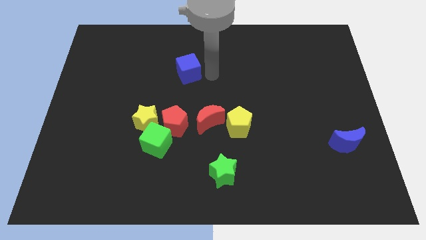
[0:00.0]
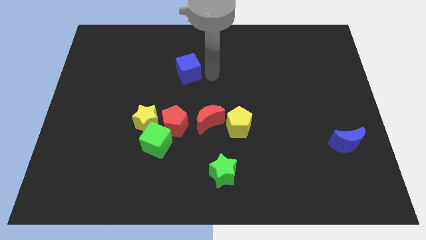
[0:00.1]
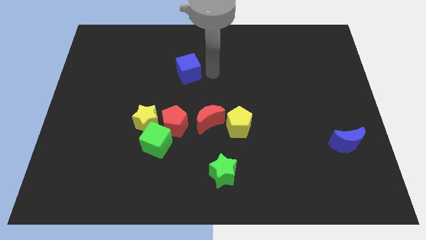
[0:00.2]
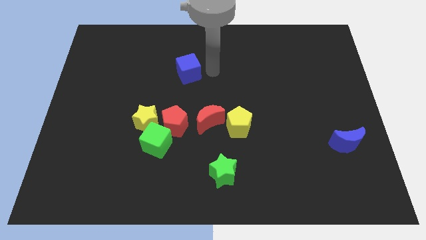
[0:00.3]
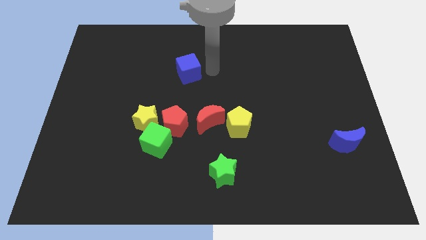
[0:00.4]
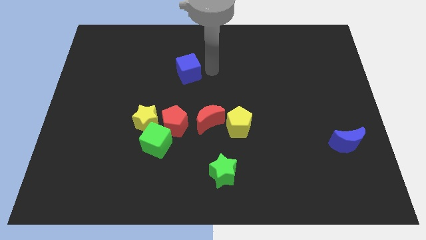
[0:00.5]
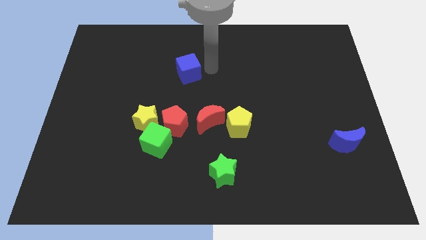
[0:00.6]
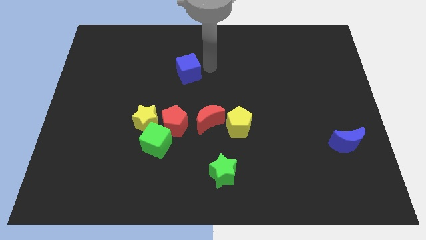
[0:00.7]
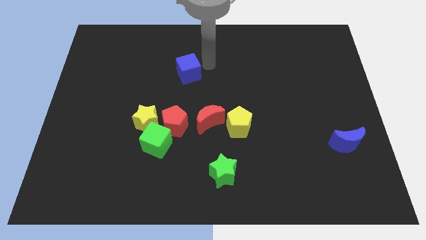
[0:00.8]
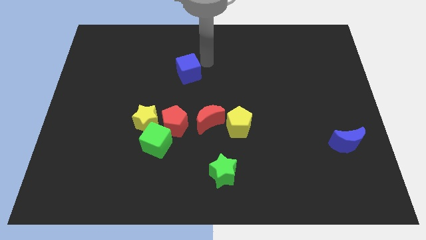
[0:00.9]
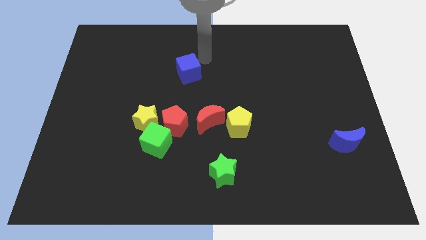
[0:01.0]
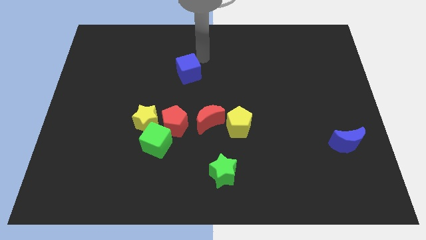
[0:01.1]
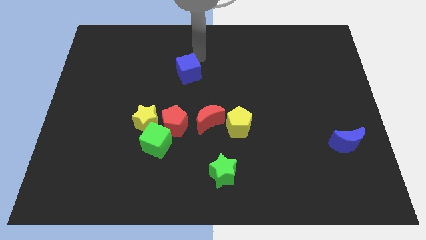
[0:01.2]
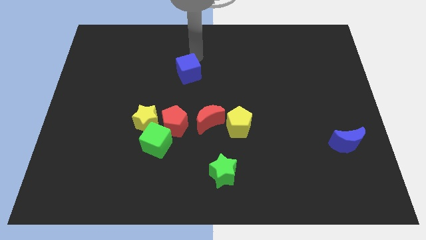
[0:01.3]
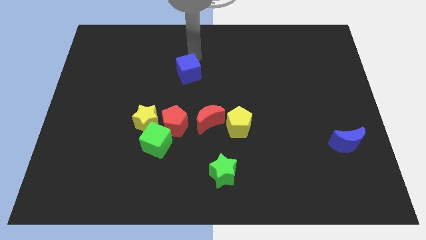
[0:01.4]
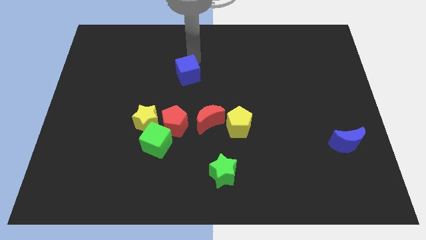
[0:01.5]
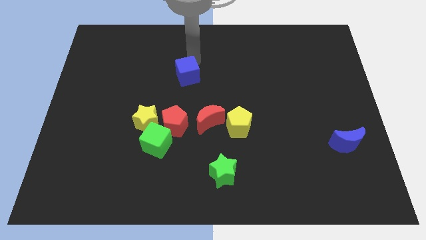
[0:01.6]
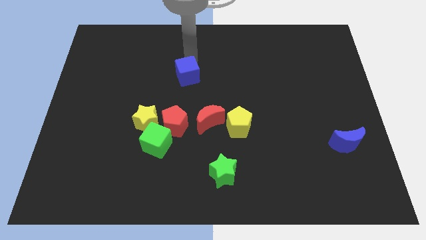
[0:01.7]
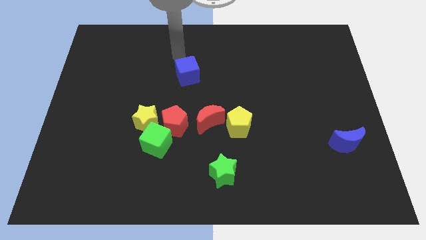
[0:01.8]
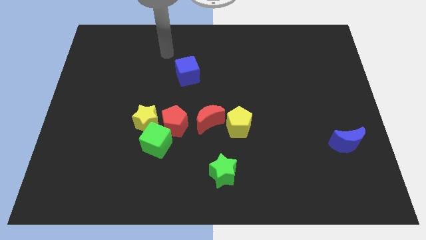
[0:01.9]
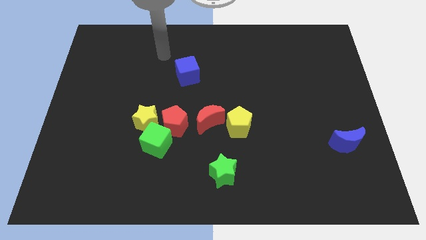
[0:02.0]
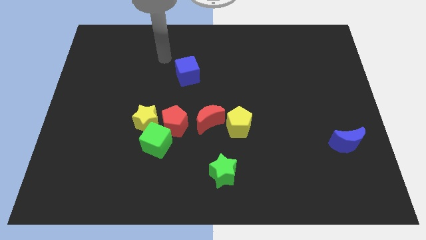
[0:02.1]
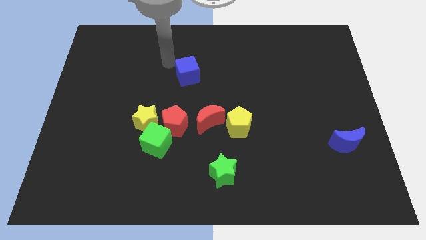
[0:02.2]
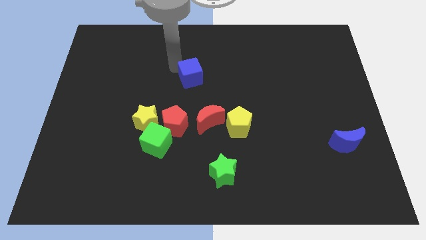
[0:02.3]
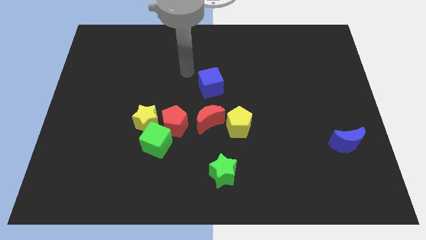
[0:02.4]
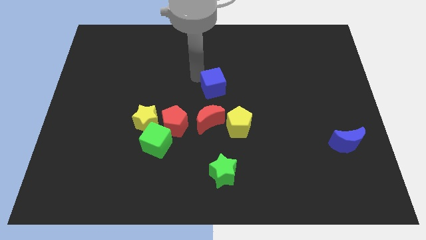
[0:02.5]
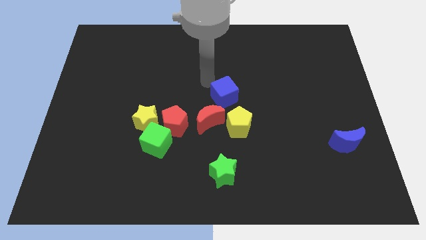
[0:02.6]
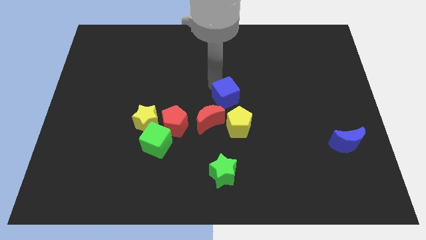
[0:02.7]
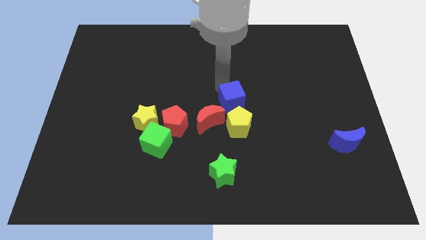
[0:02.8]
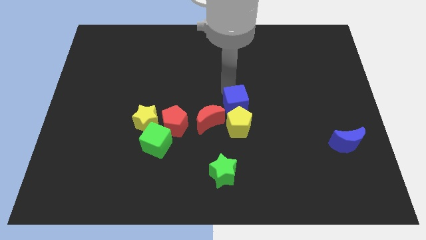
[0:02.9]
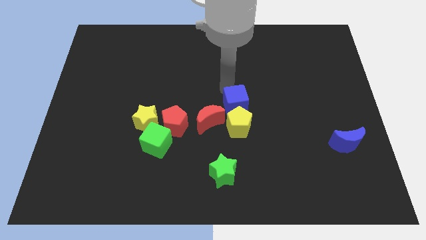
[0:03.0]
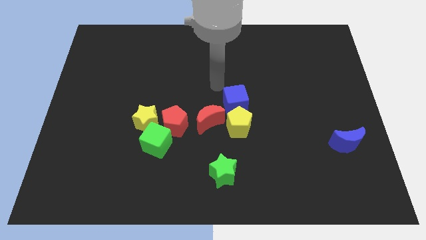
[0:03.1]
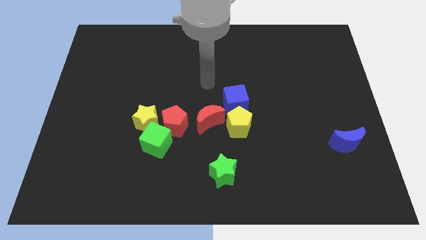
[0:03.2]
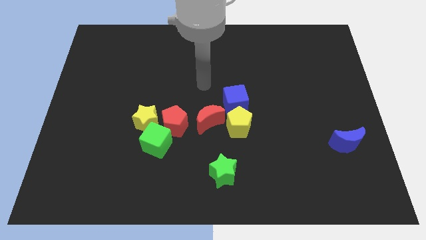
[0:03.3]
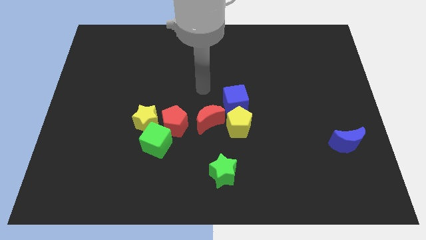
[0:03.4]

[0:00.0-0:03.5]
place the blue cube above the yellow pentagon

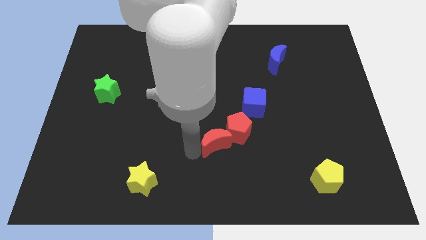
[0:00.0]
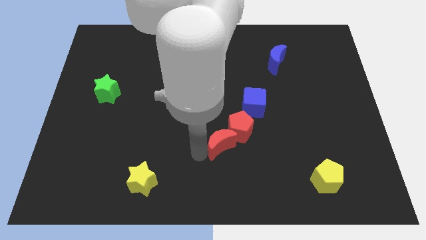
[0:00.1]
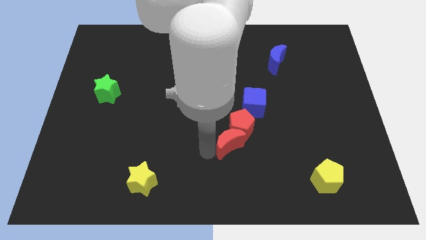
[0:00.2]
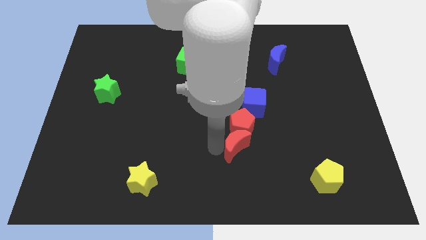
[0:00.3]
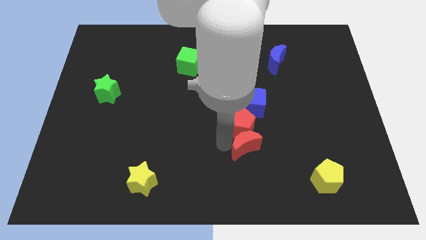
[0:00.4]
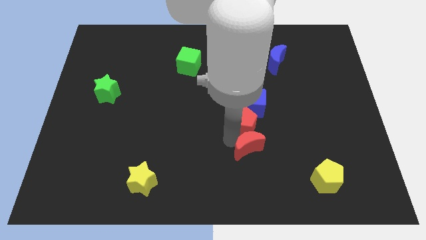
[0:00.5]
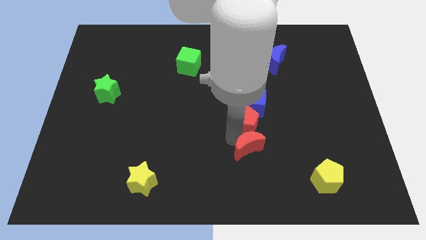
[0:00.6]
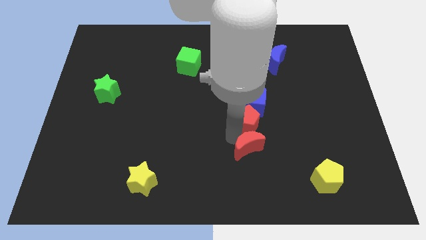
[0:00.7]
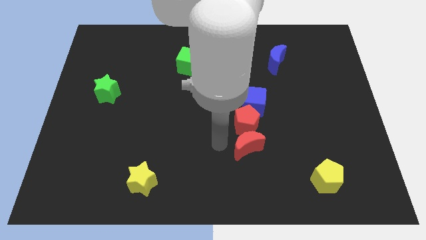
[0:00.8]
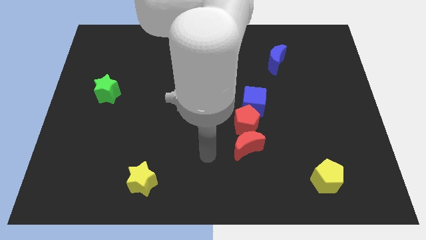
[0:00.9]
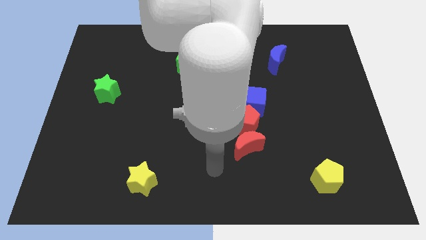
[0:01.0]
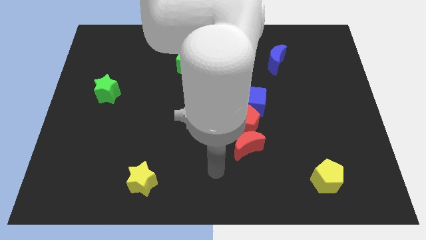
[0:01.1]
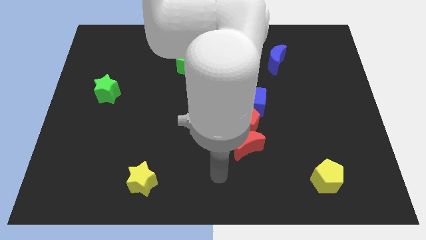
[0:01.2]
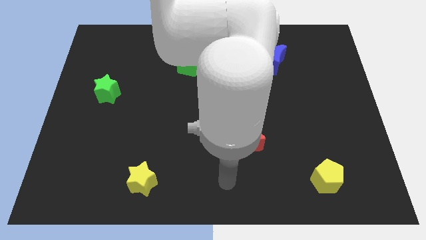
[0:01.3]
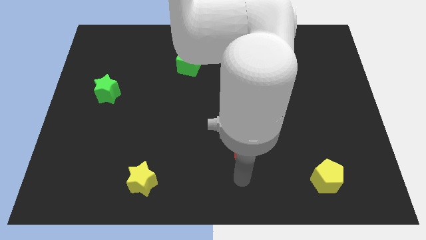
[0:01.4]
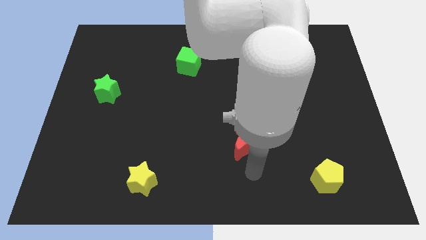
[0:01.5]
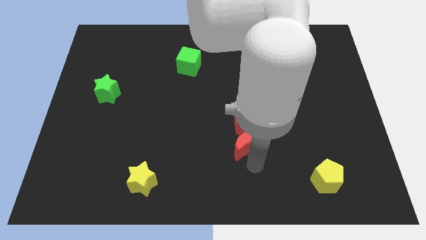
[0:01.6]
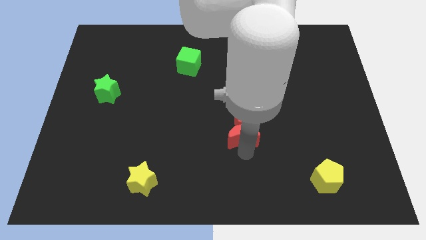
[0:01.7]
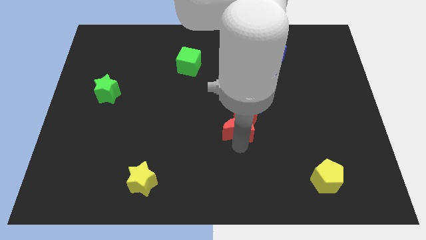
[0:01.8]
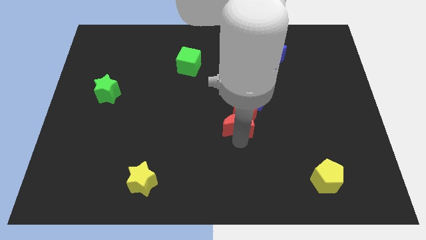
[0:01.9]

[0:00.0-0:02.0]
move the red blocks towards top of the board

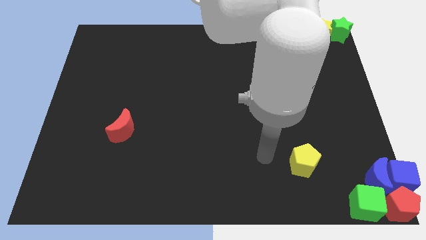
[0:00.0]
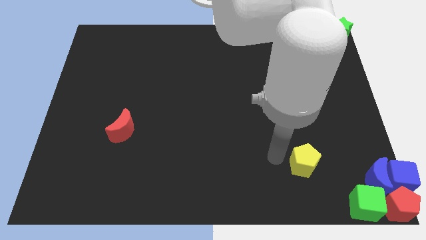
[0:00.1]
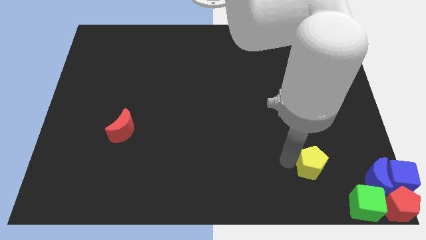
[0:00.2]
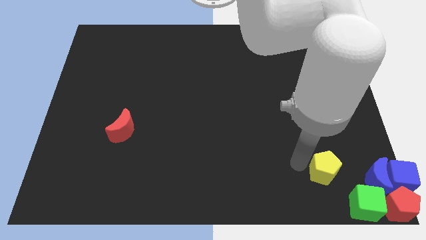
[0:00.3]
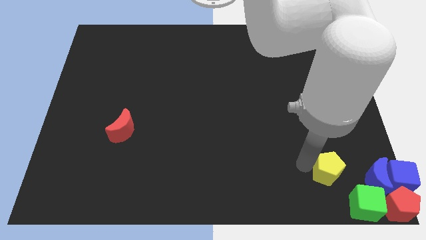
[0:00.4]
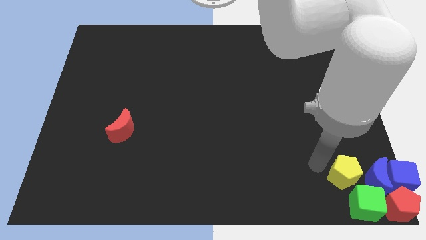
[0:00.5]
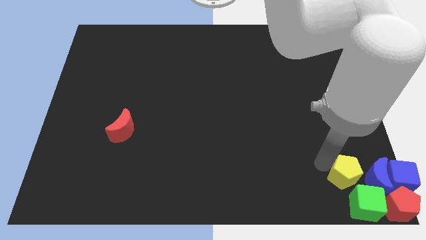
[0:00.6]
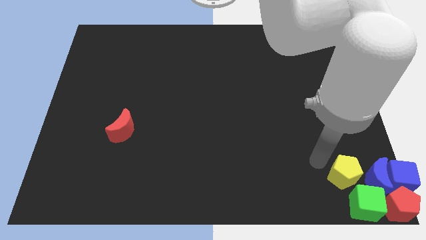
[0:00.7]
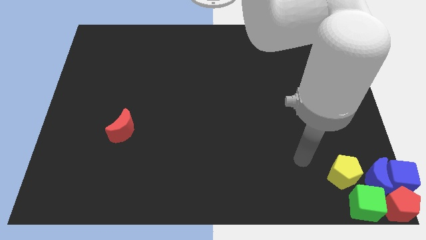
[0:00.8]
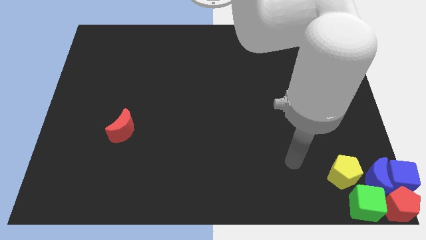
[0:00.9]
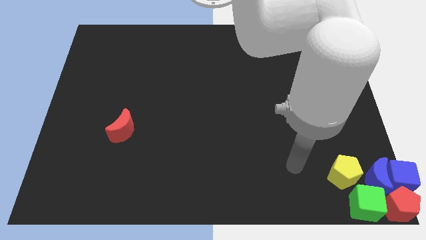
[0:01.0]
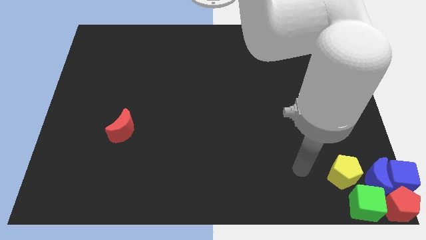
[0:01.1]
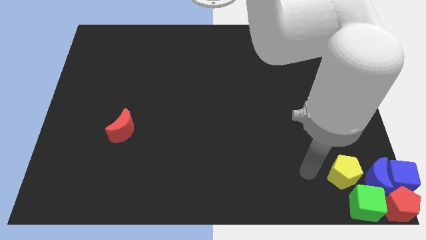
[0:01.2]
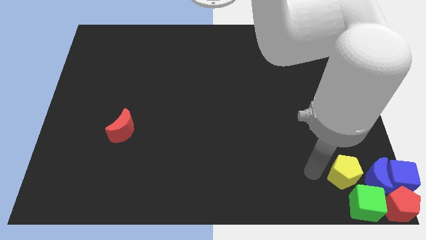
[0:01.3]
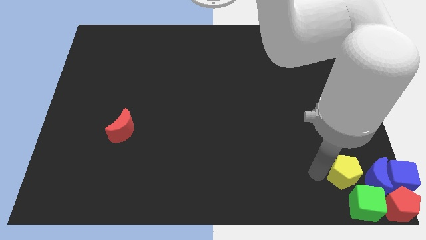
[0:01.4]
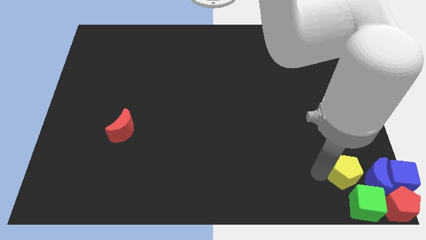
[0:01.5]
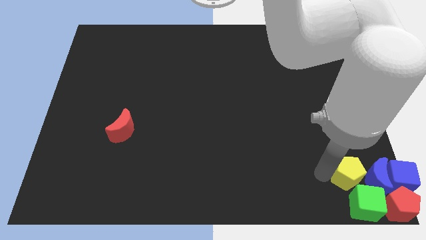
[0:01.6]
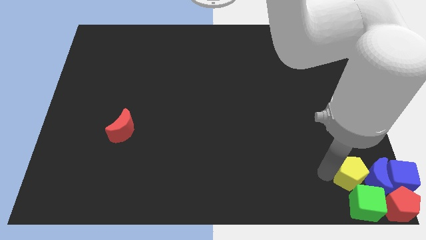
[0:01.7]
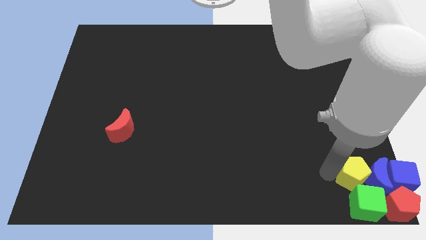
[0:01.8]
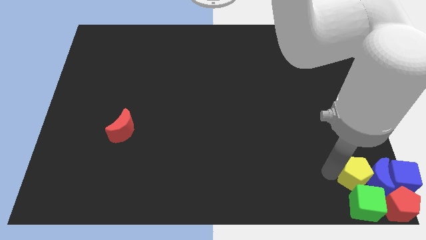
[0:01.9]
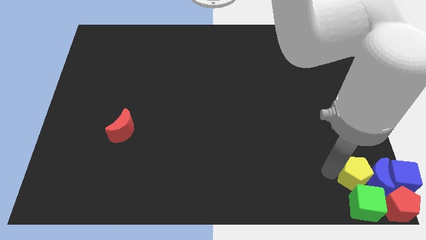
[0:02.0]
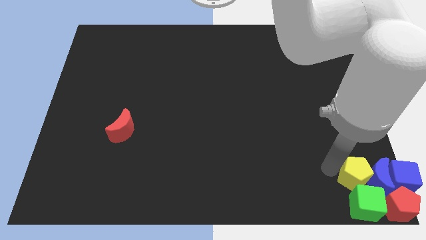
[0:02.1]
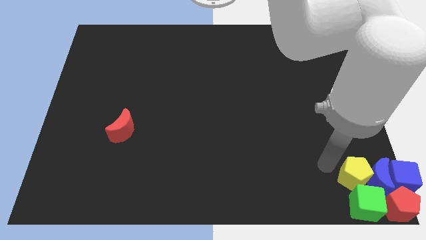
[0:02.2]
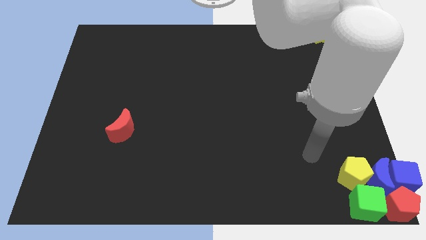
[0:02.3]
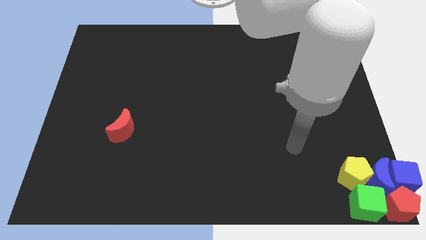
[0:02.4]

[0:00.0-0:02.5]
place the yellow pentagon to the left side of the blue moon

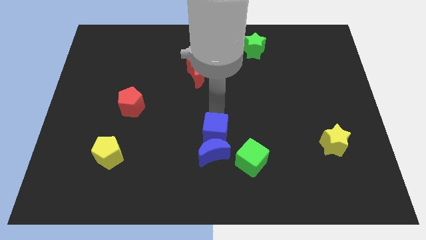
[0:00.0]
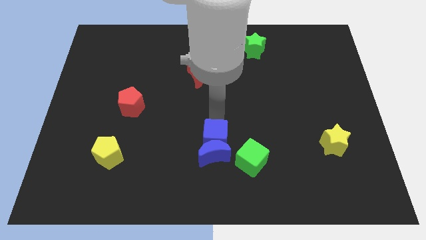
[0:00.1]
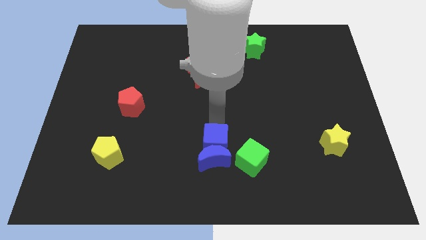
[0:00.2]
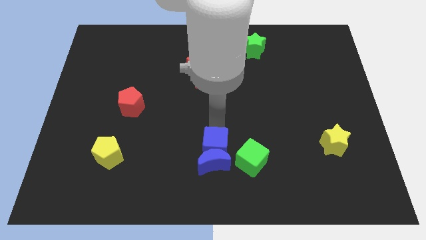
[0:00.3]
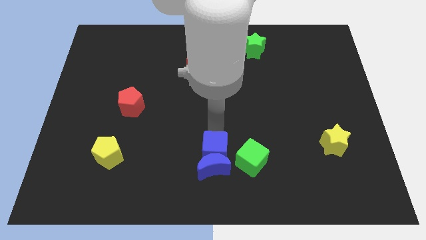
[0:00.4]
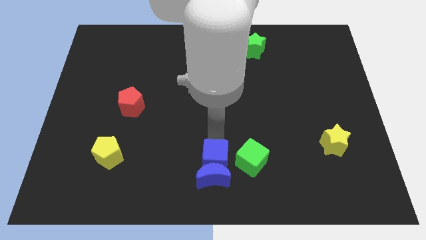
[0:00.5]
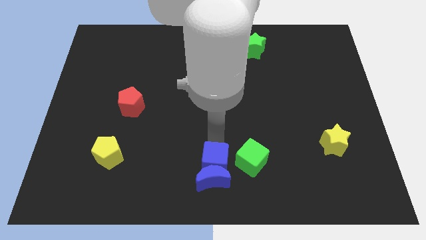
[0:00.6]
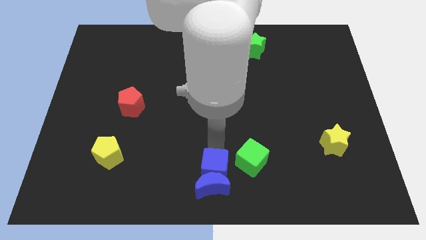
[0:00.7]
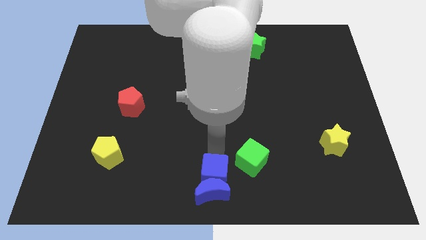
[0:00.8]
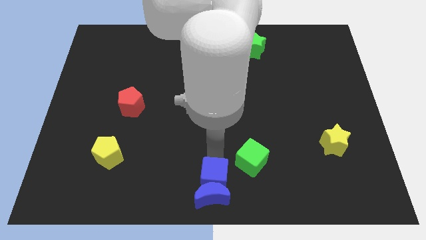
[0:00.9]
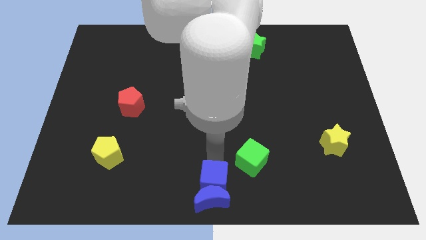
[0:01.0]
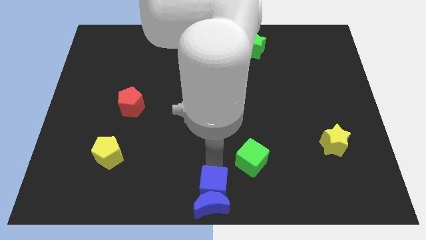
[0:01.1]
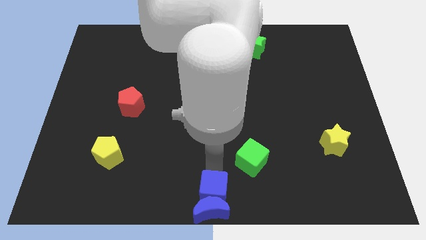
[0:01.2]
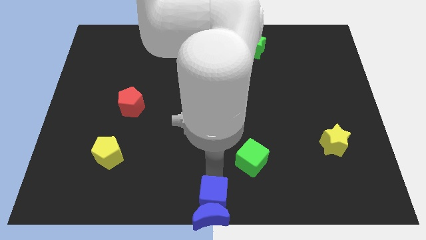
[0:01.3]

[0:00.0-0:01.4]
push the blue cube along with the blue crescent to the bottom center of the board
